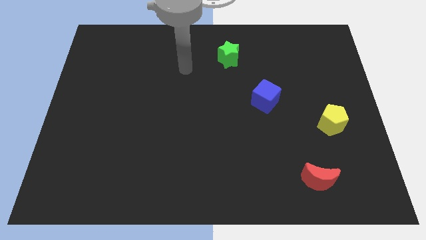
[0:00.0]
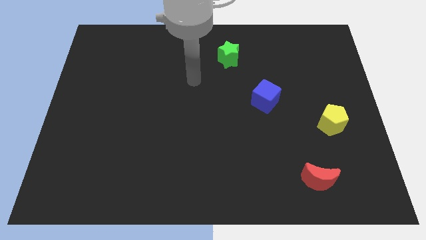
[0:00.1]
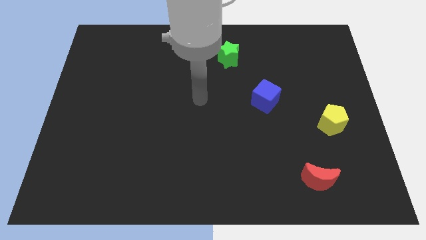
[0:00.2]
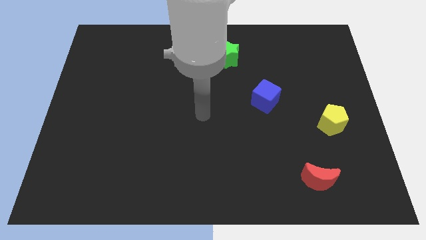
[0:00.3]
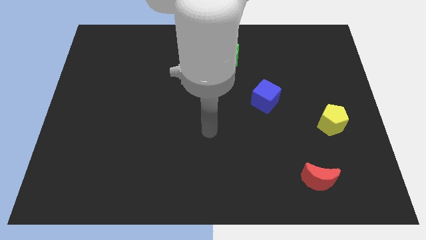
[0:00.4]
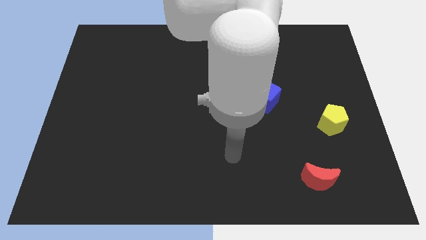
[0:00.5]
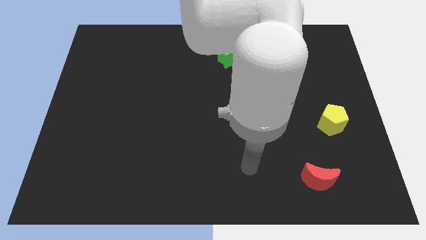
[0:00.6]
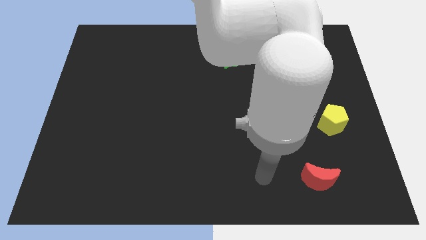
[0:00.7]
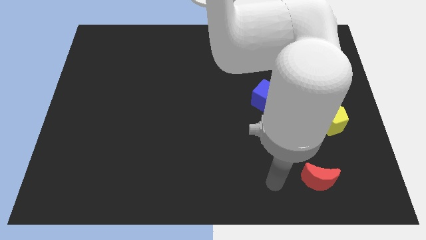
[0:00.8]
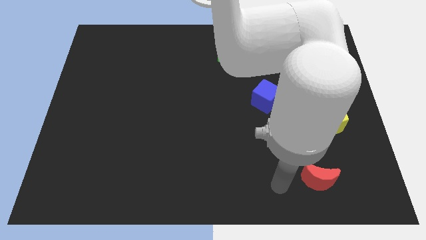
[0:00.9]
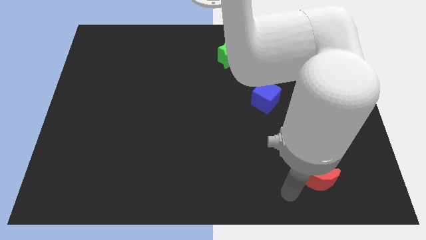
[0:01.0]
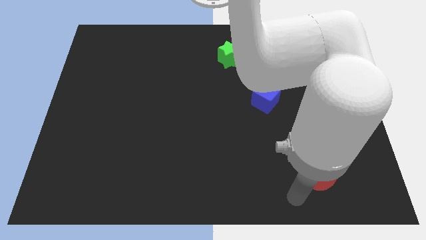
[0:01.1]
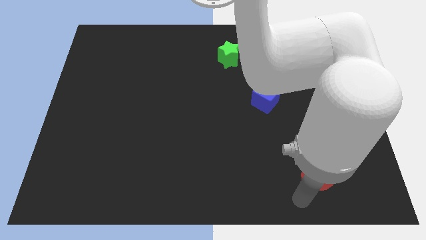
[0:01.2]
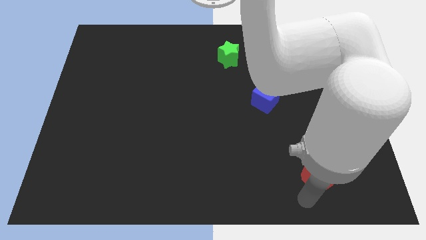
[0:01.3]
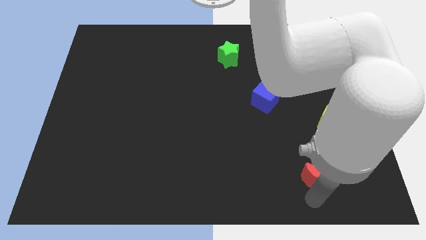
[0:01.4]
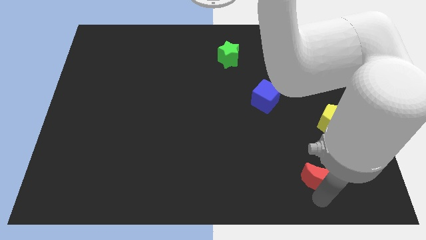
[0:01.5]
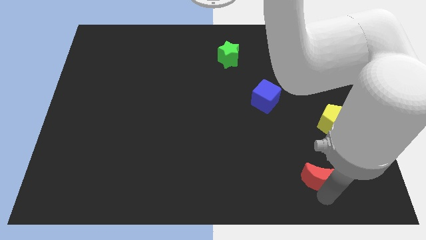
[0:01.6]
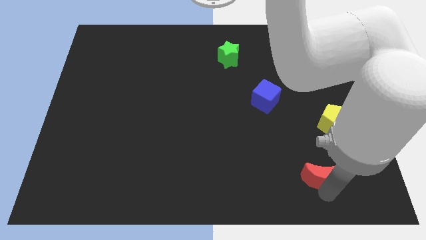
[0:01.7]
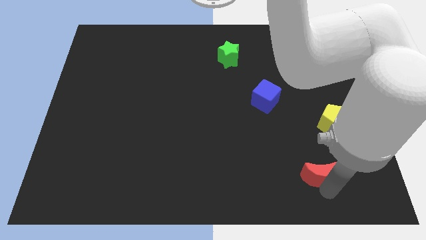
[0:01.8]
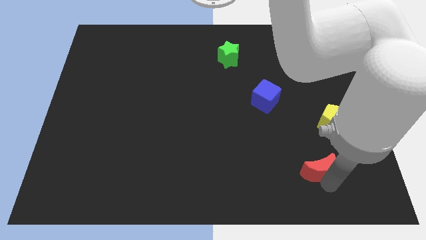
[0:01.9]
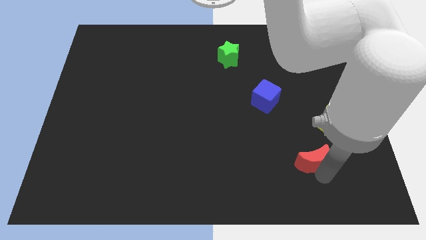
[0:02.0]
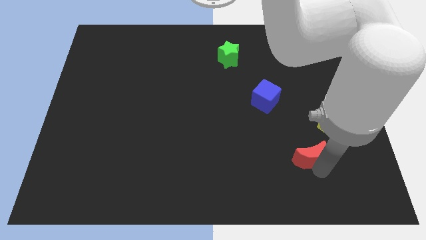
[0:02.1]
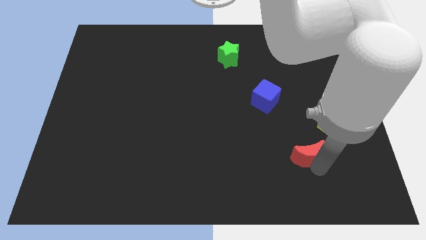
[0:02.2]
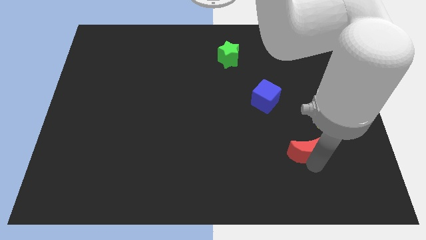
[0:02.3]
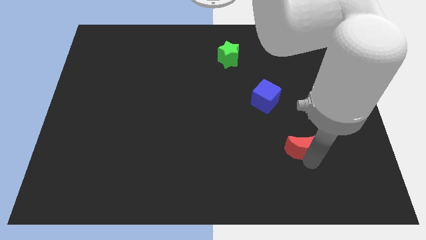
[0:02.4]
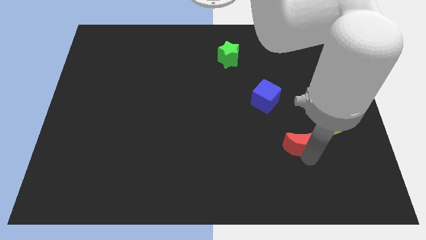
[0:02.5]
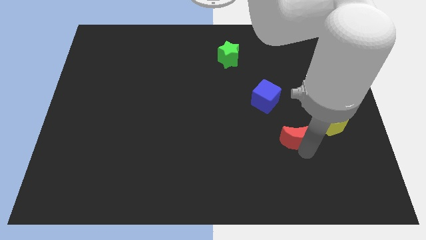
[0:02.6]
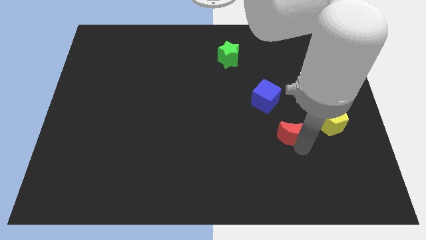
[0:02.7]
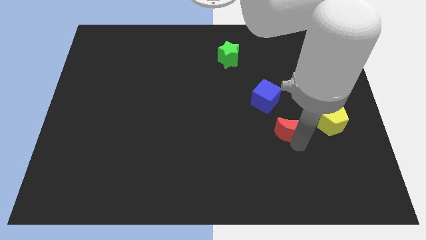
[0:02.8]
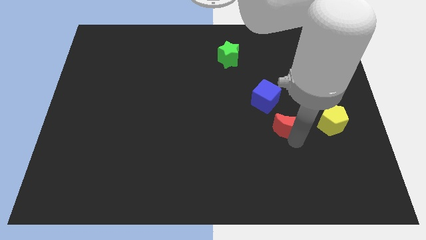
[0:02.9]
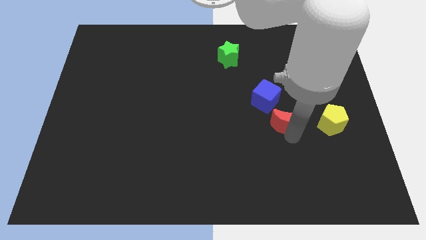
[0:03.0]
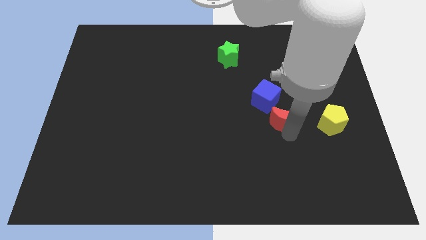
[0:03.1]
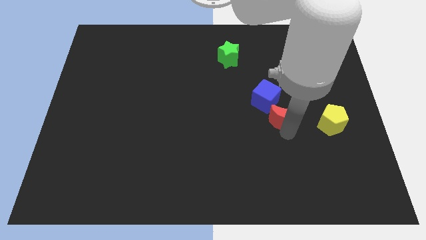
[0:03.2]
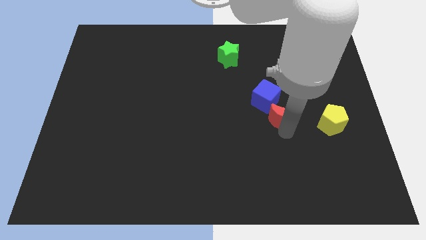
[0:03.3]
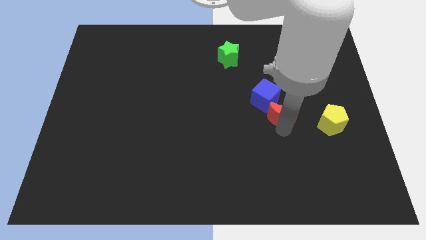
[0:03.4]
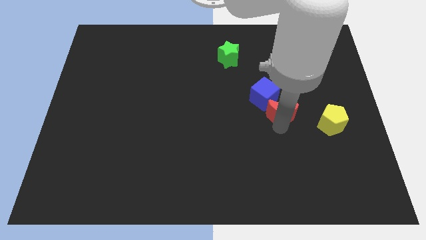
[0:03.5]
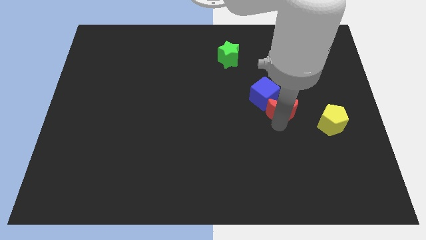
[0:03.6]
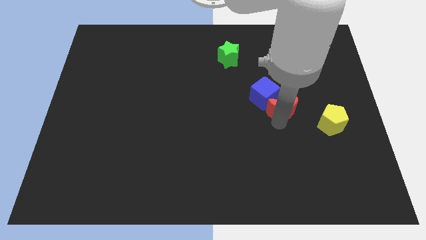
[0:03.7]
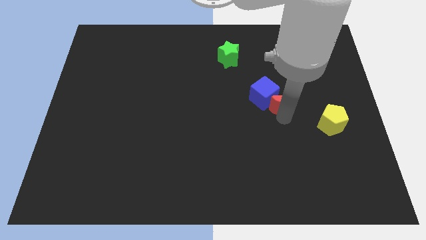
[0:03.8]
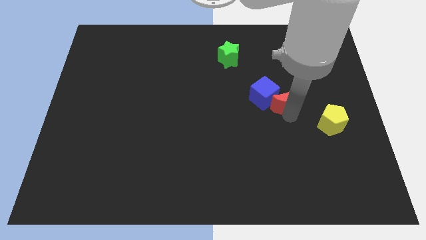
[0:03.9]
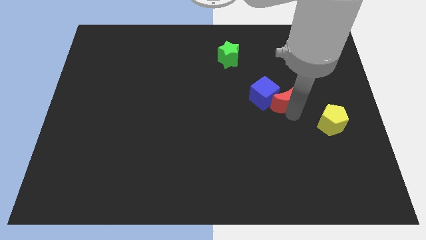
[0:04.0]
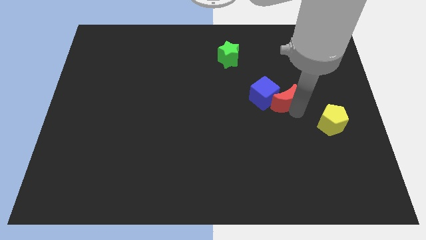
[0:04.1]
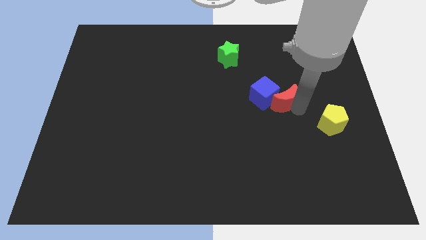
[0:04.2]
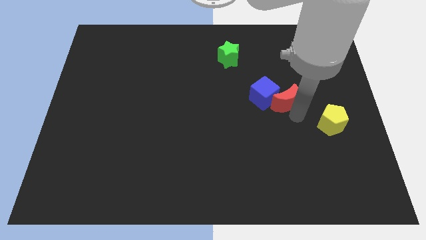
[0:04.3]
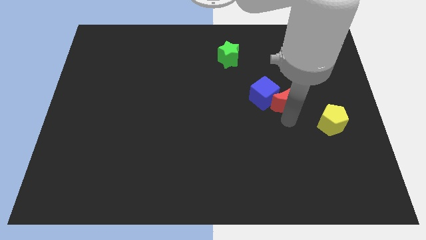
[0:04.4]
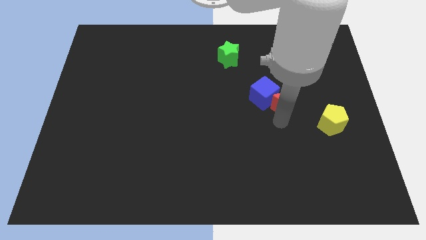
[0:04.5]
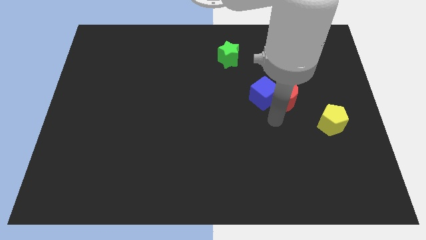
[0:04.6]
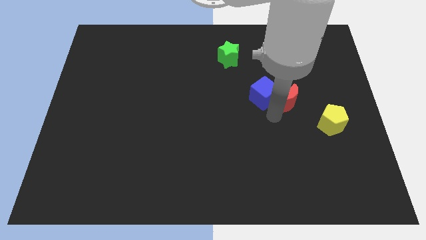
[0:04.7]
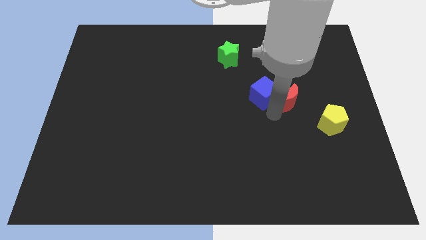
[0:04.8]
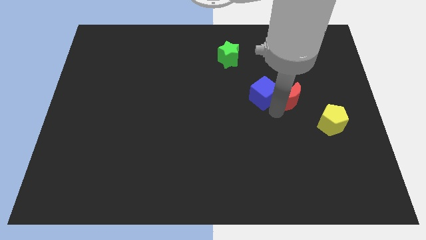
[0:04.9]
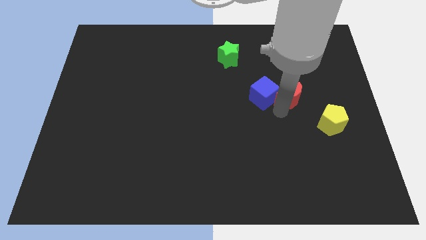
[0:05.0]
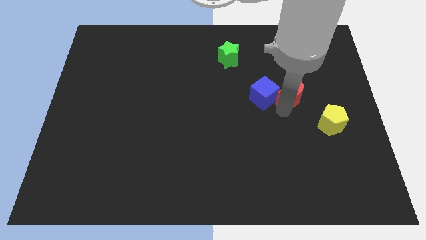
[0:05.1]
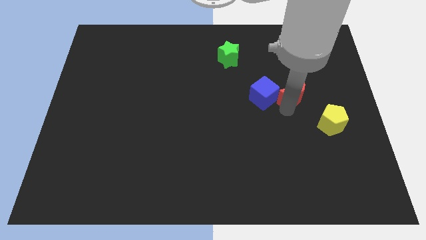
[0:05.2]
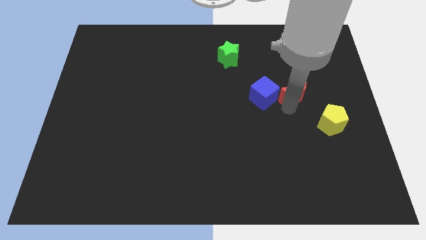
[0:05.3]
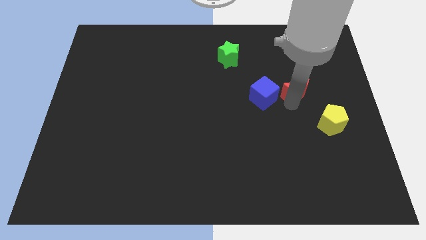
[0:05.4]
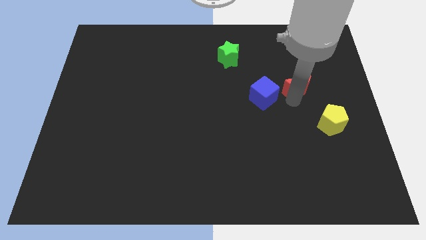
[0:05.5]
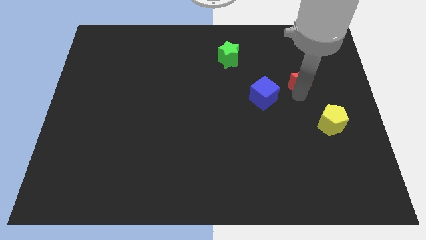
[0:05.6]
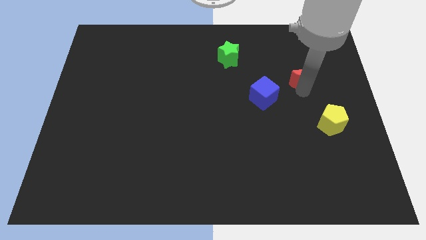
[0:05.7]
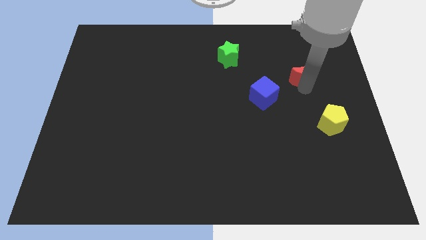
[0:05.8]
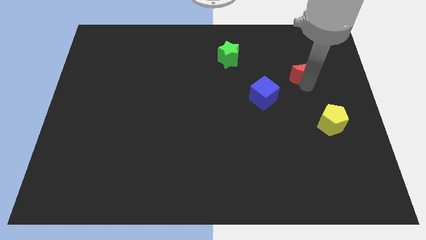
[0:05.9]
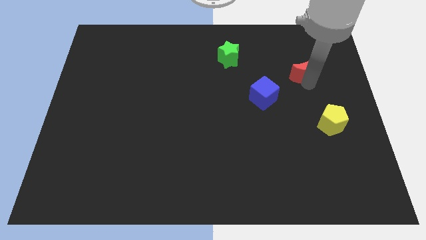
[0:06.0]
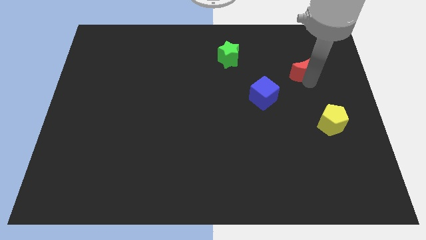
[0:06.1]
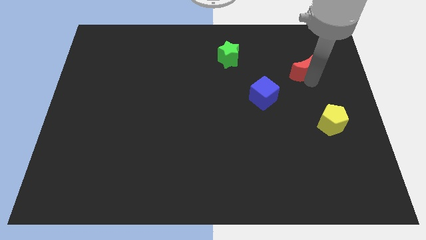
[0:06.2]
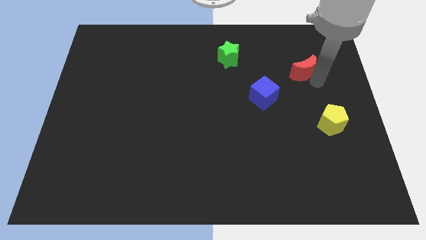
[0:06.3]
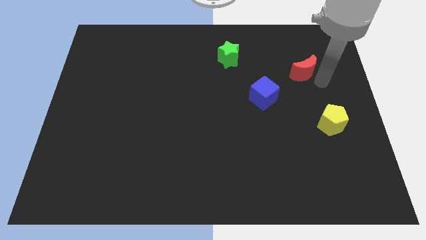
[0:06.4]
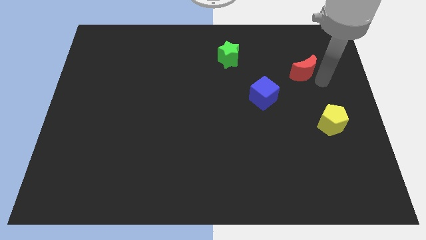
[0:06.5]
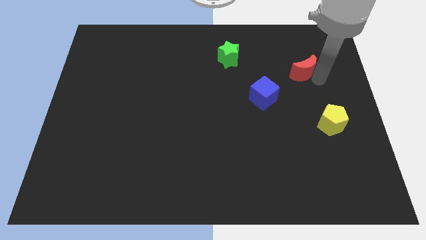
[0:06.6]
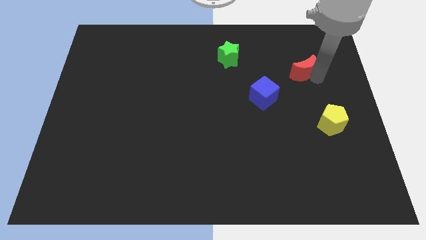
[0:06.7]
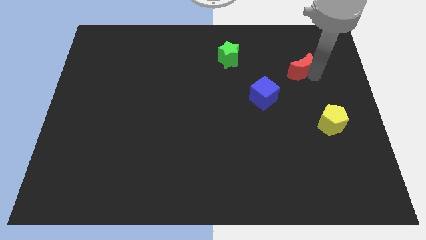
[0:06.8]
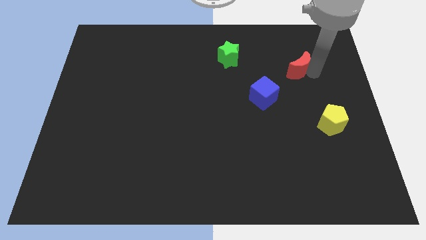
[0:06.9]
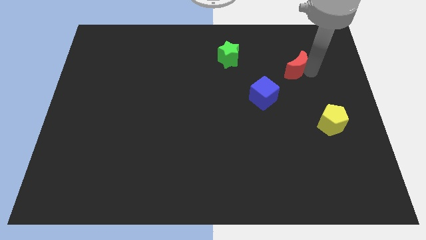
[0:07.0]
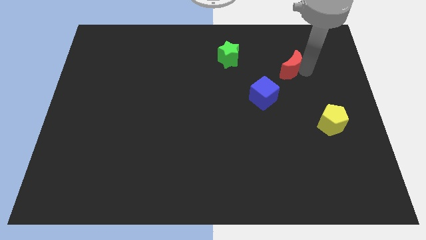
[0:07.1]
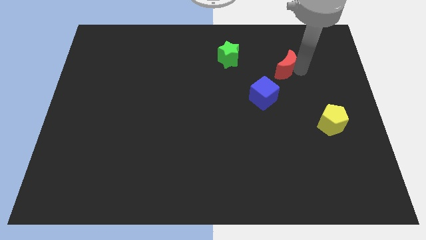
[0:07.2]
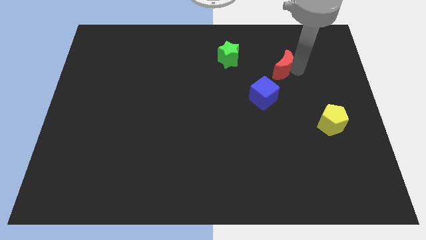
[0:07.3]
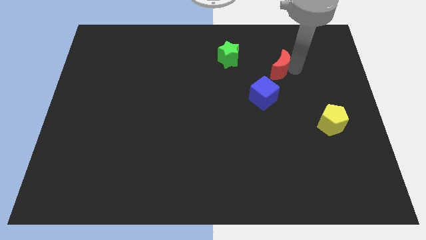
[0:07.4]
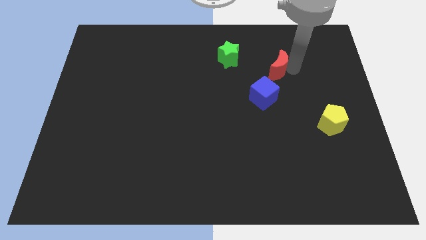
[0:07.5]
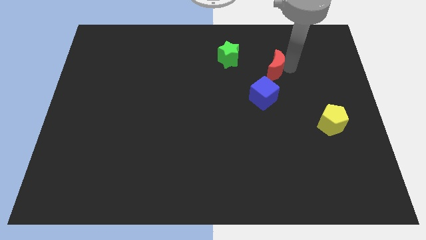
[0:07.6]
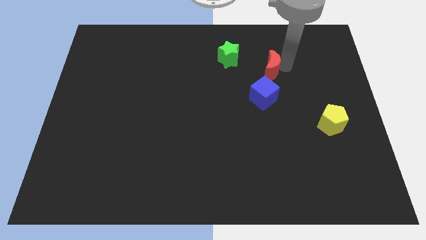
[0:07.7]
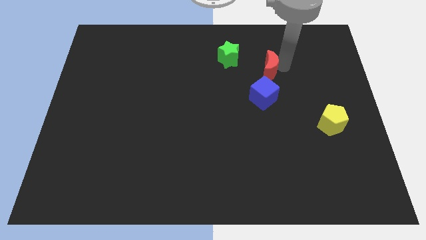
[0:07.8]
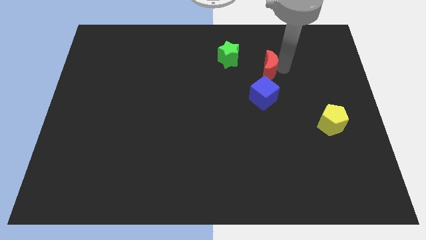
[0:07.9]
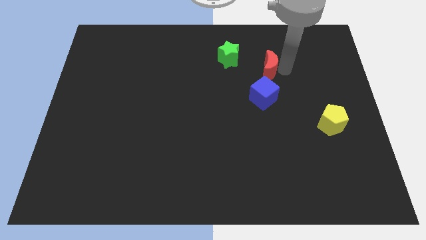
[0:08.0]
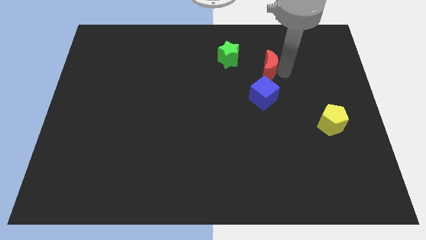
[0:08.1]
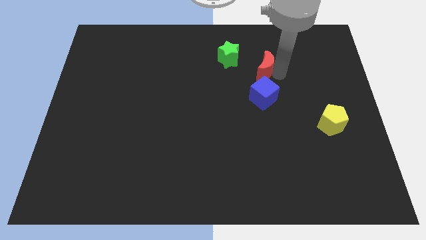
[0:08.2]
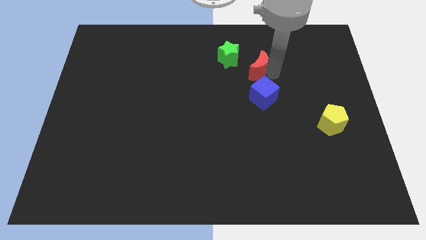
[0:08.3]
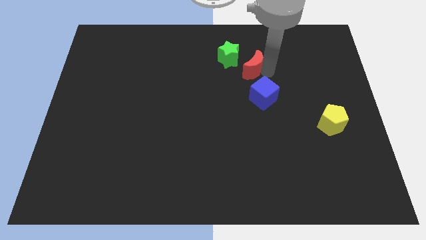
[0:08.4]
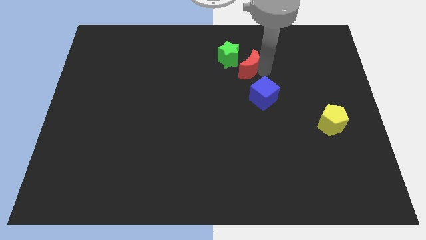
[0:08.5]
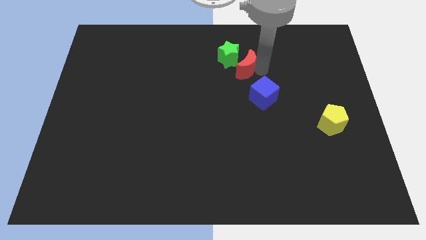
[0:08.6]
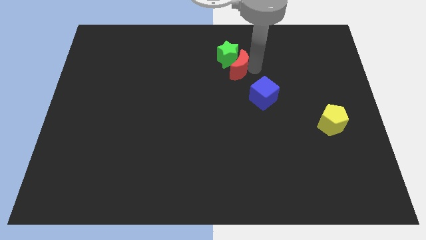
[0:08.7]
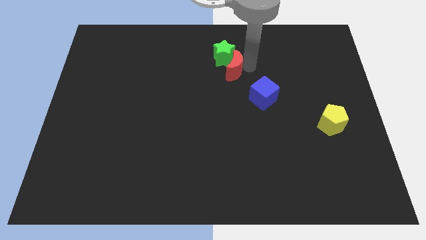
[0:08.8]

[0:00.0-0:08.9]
push the red block next to the green block
